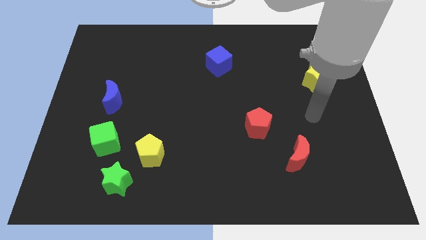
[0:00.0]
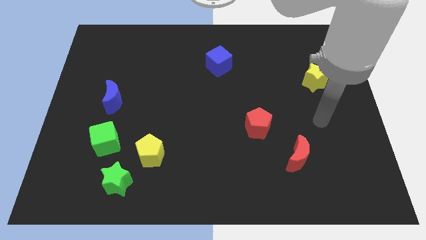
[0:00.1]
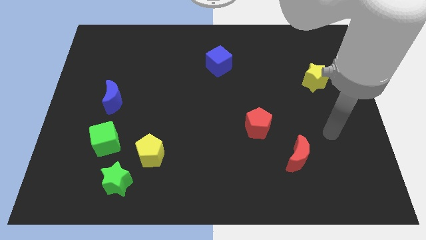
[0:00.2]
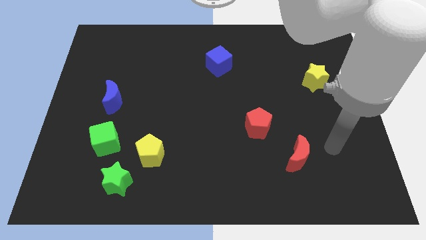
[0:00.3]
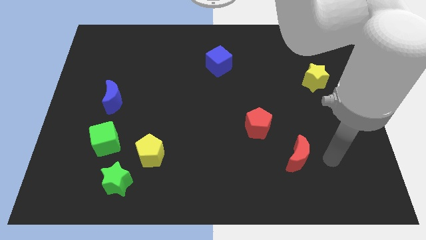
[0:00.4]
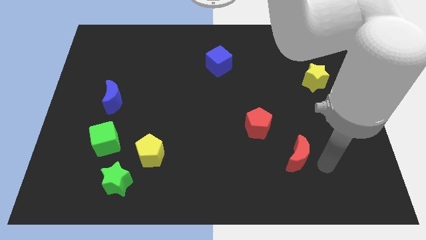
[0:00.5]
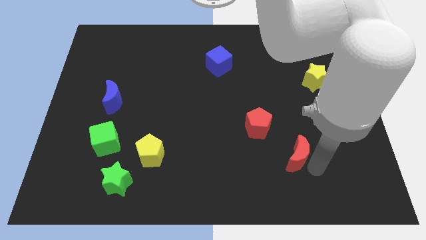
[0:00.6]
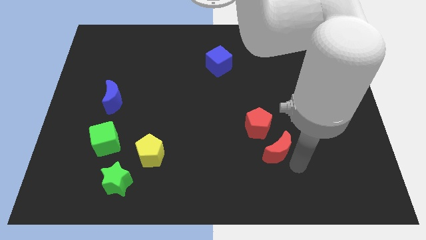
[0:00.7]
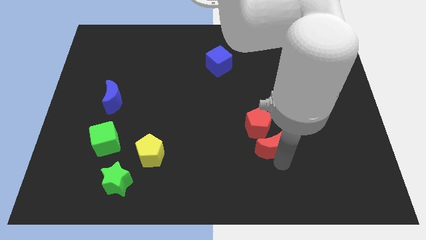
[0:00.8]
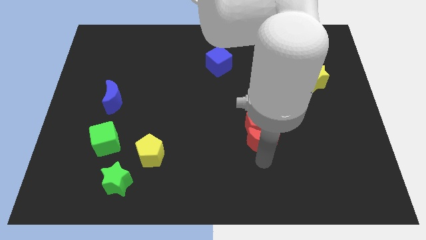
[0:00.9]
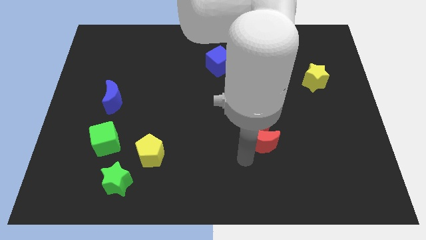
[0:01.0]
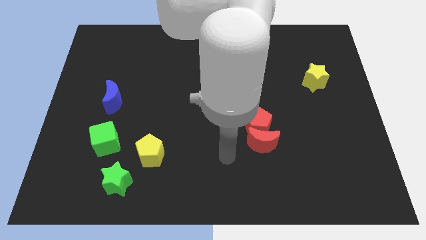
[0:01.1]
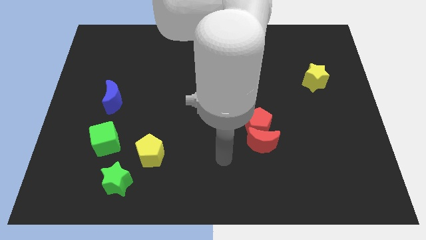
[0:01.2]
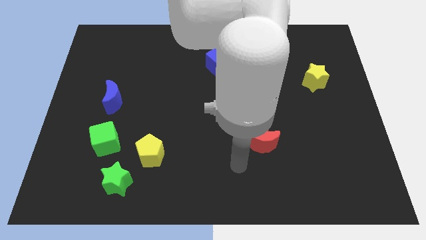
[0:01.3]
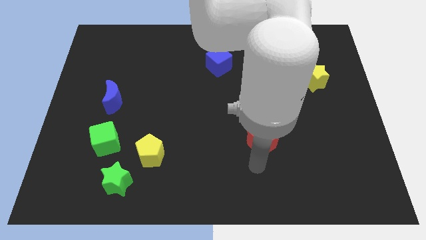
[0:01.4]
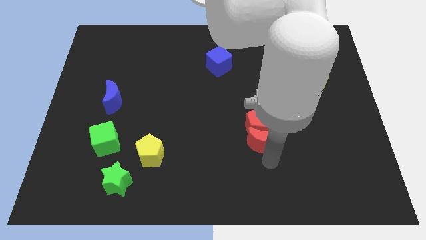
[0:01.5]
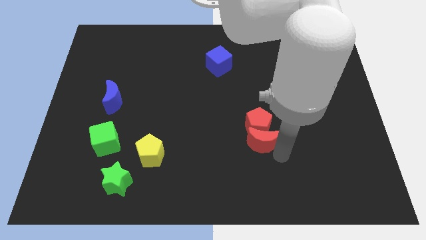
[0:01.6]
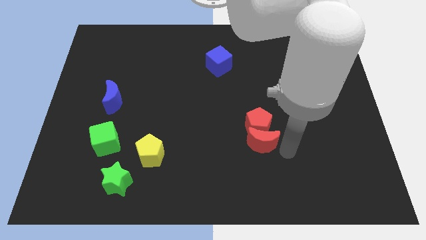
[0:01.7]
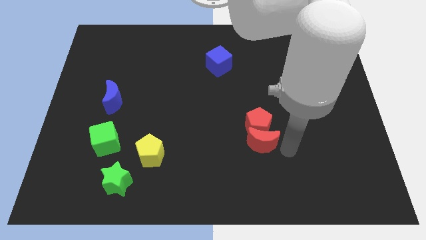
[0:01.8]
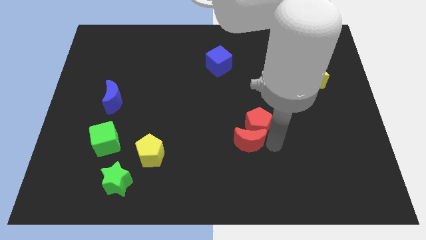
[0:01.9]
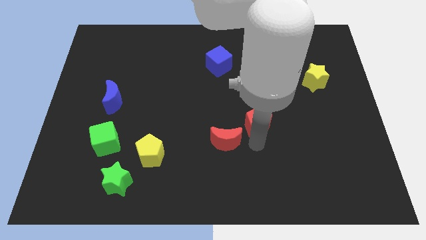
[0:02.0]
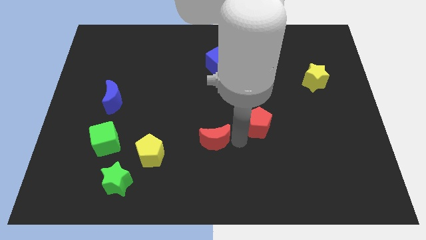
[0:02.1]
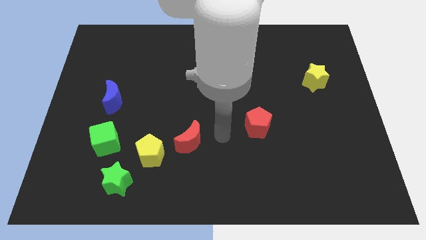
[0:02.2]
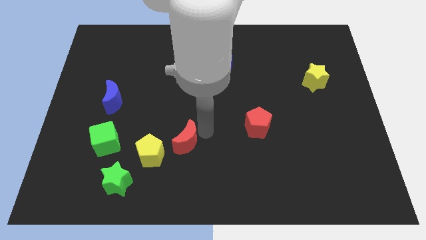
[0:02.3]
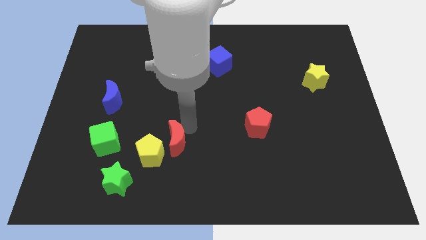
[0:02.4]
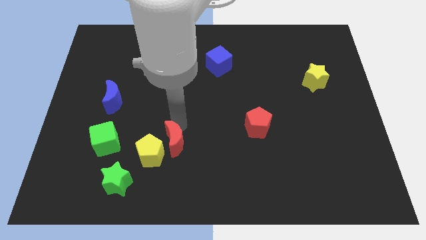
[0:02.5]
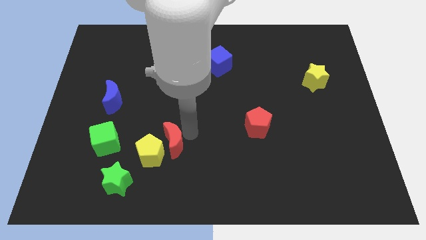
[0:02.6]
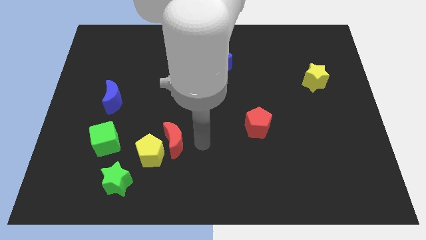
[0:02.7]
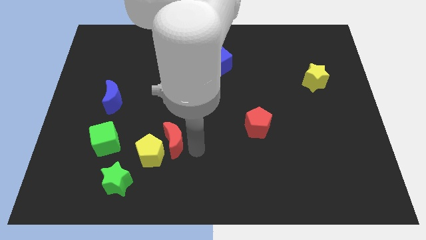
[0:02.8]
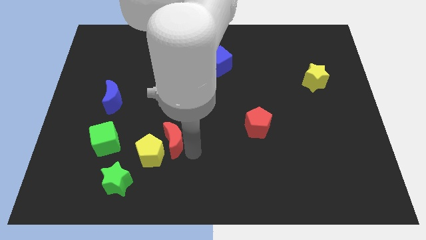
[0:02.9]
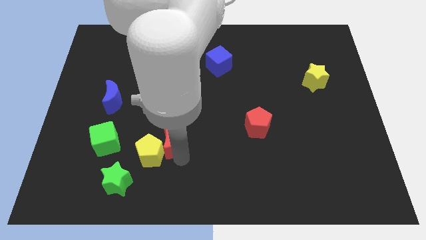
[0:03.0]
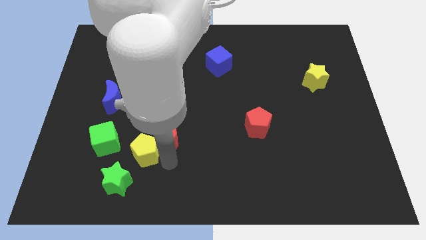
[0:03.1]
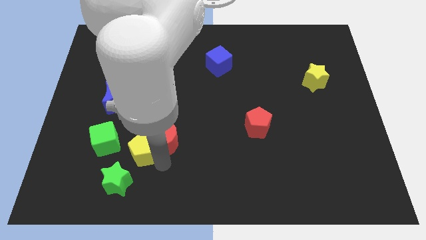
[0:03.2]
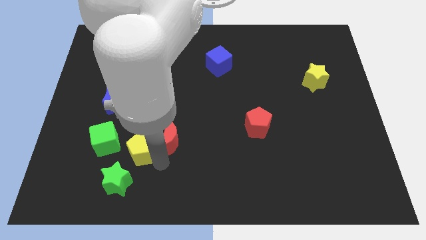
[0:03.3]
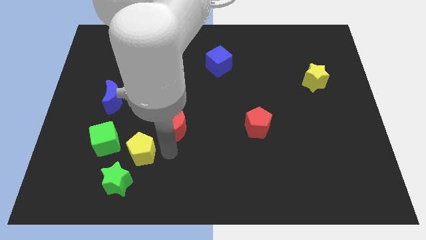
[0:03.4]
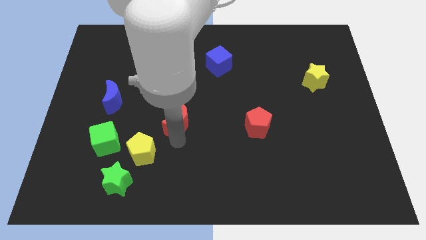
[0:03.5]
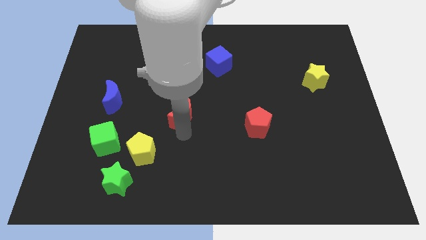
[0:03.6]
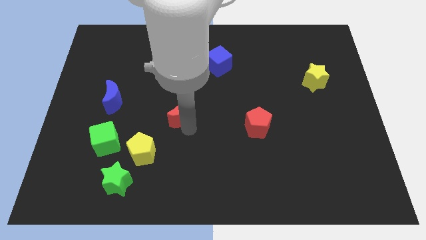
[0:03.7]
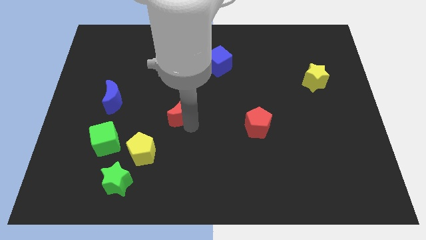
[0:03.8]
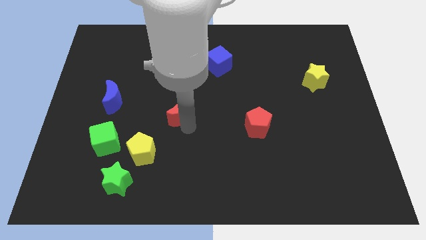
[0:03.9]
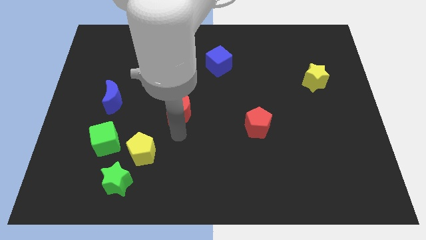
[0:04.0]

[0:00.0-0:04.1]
move the red crescent towards the center of the board

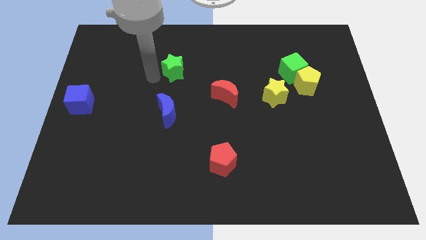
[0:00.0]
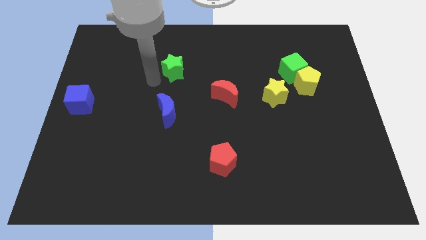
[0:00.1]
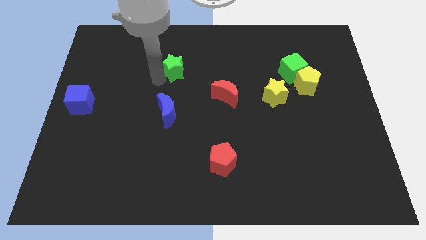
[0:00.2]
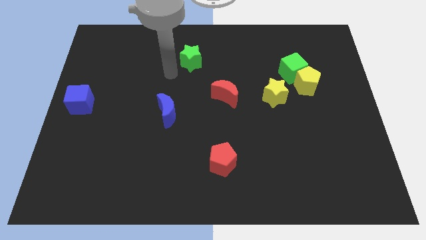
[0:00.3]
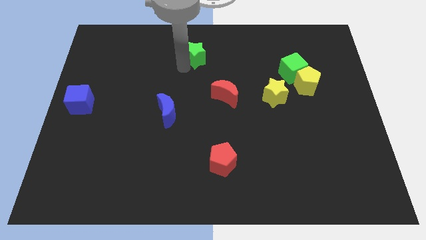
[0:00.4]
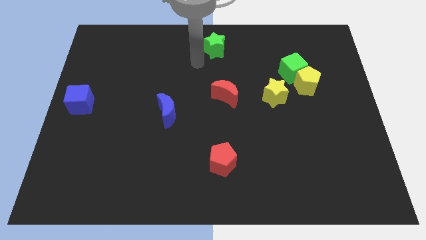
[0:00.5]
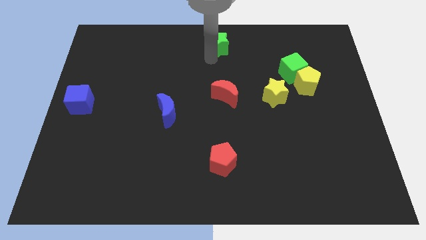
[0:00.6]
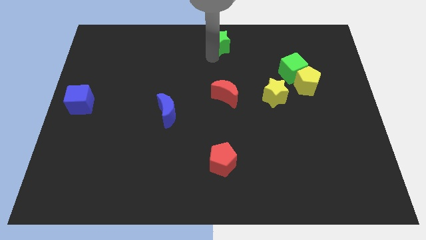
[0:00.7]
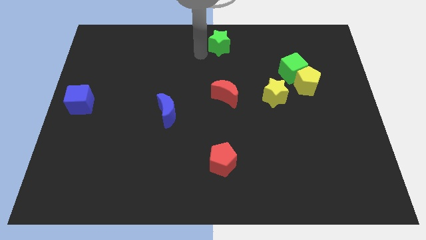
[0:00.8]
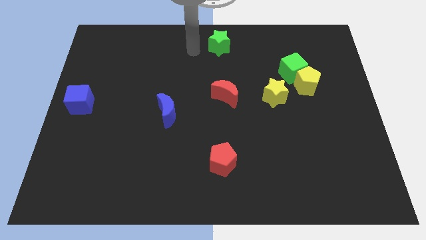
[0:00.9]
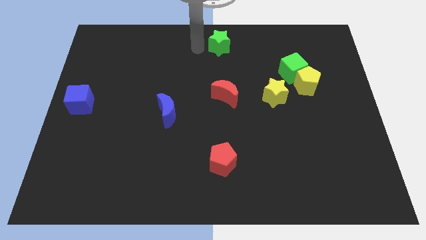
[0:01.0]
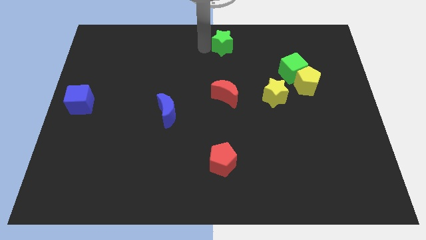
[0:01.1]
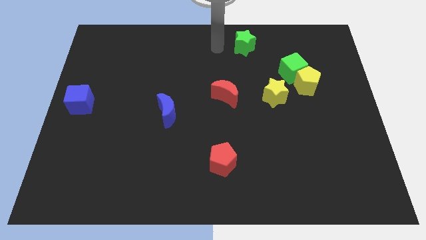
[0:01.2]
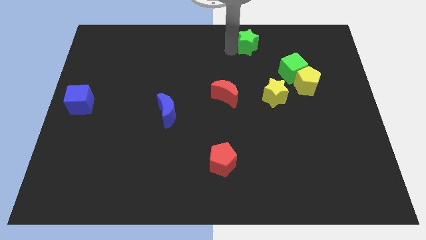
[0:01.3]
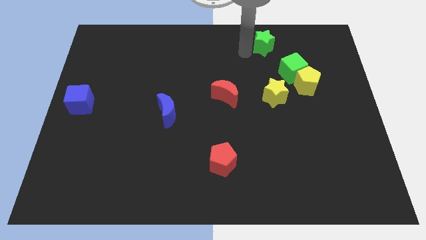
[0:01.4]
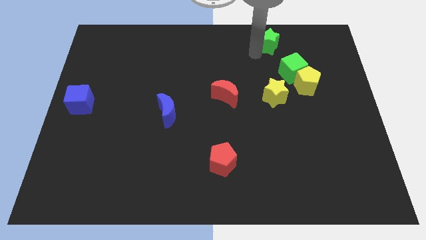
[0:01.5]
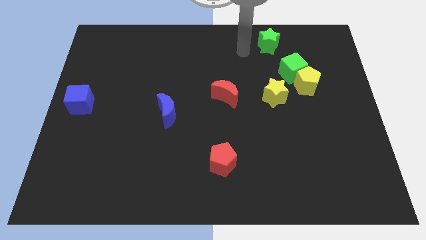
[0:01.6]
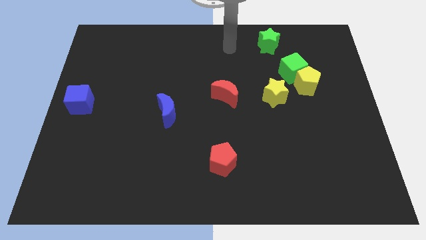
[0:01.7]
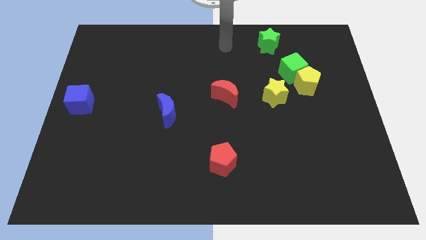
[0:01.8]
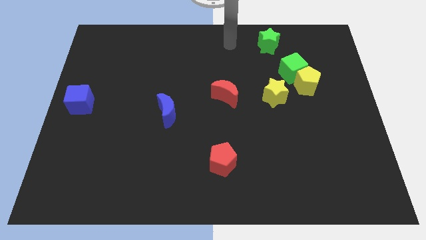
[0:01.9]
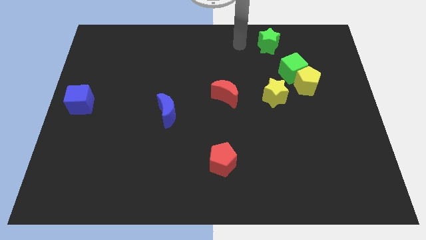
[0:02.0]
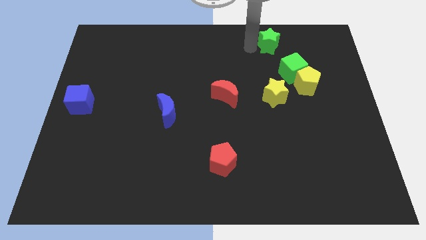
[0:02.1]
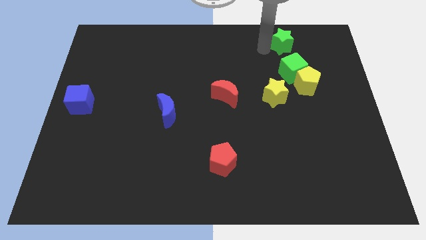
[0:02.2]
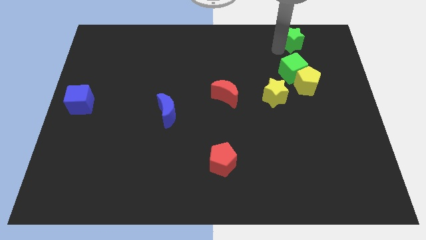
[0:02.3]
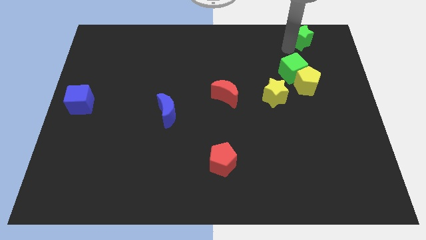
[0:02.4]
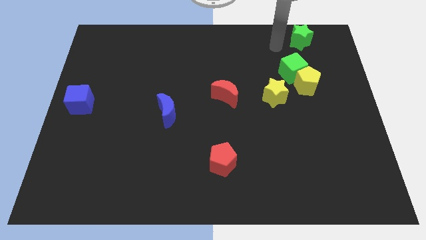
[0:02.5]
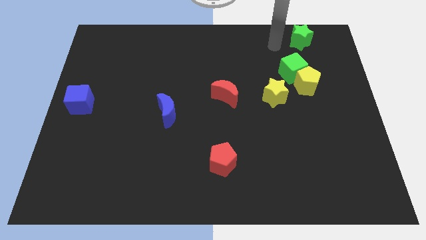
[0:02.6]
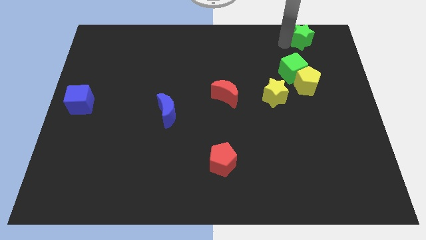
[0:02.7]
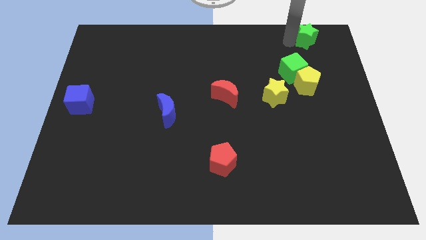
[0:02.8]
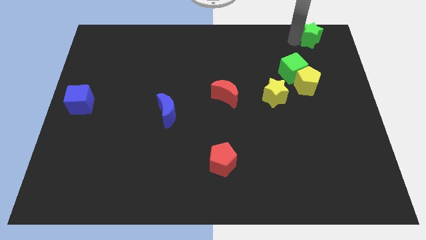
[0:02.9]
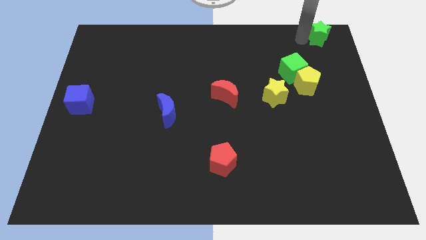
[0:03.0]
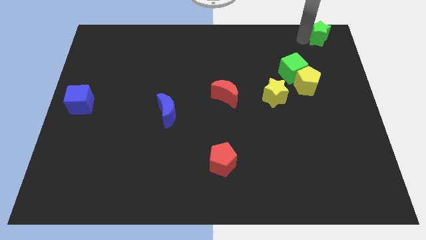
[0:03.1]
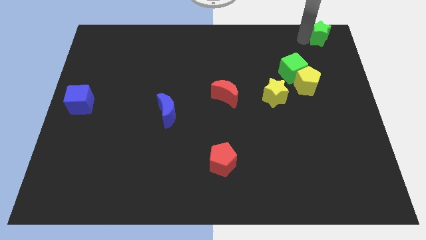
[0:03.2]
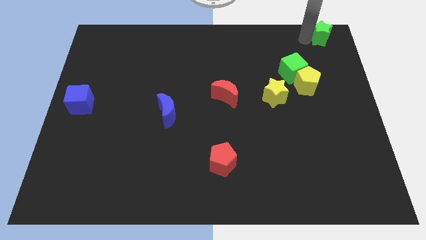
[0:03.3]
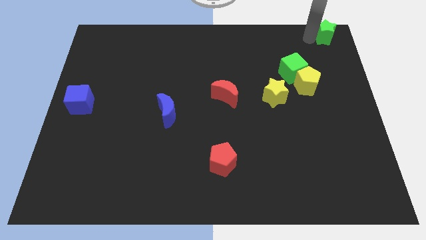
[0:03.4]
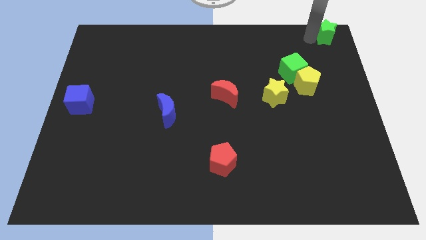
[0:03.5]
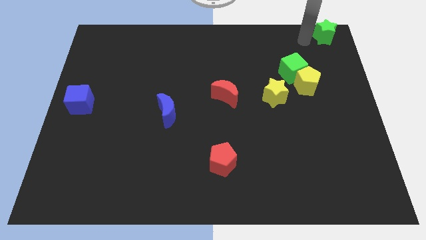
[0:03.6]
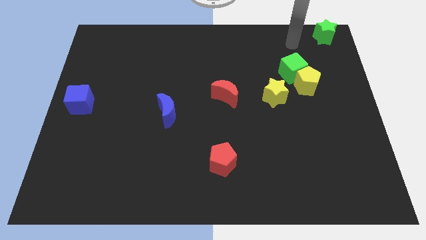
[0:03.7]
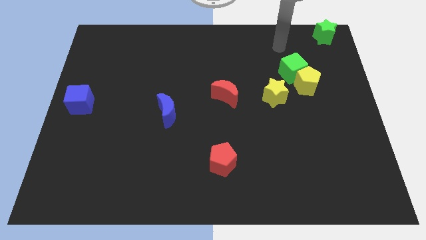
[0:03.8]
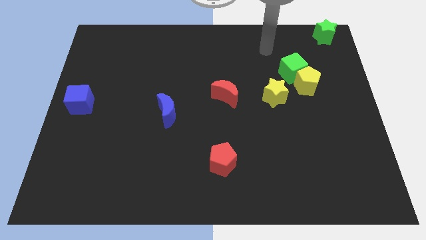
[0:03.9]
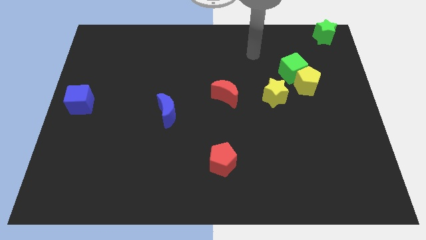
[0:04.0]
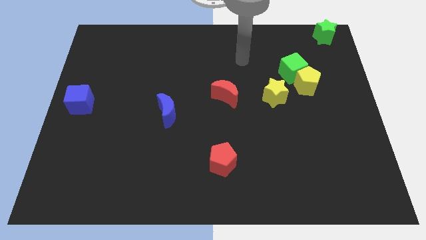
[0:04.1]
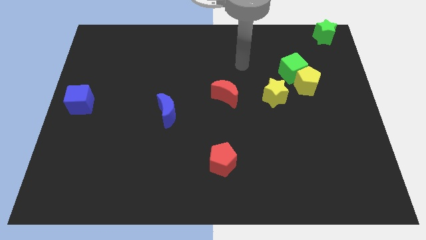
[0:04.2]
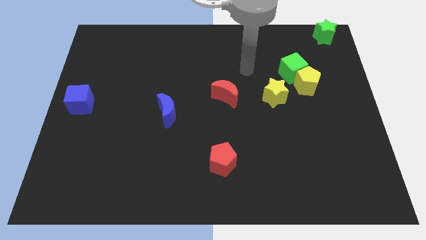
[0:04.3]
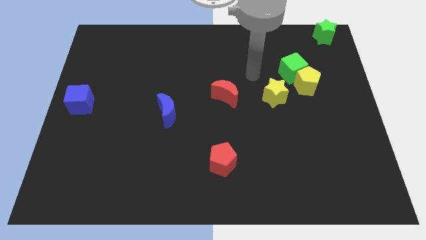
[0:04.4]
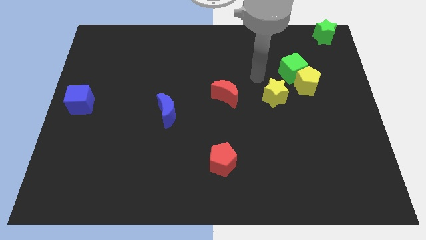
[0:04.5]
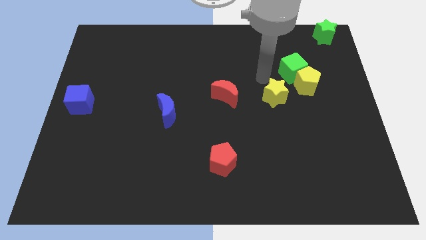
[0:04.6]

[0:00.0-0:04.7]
place the green star at the top right corner of the board

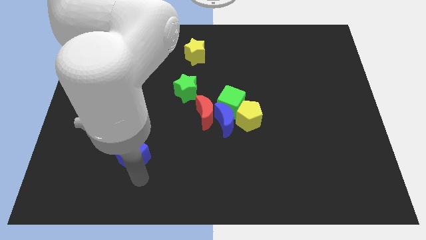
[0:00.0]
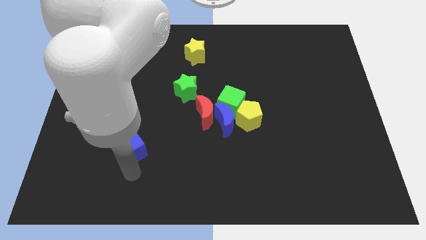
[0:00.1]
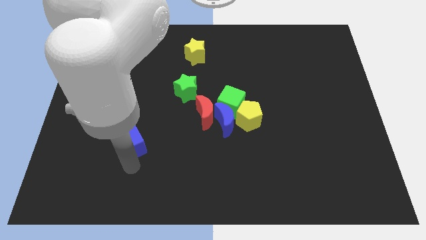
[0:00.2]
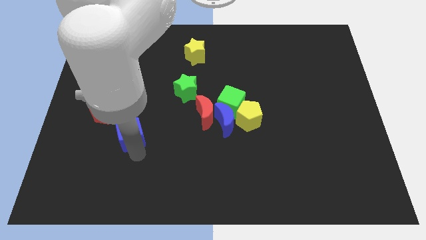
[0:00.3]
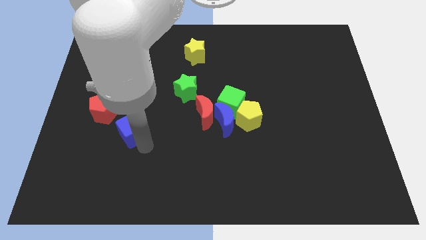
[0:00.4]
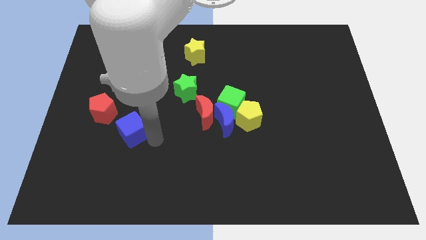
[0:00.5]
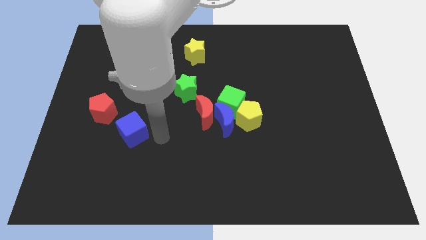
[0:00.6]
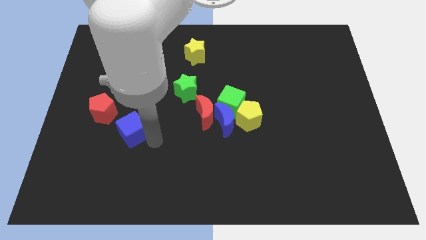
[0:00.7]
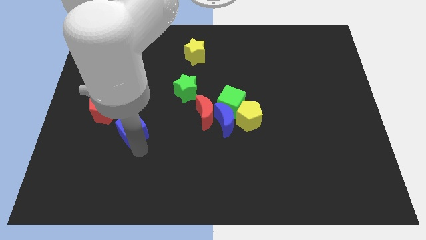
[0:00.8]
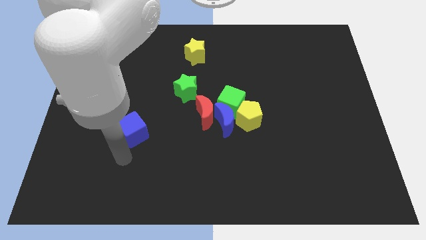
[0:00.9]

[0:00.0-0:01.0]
move the blue cube diagonally to the red pentagon
